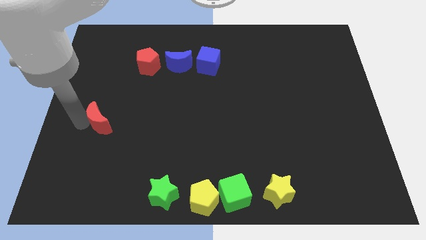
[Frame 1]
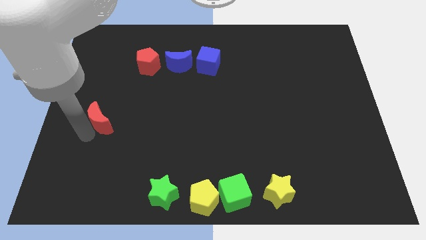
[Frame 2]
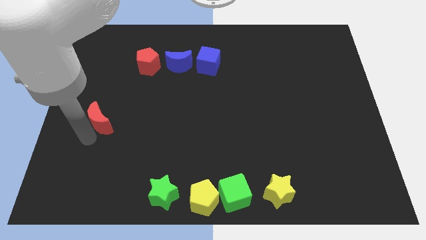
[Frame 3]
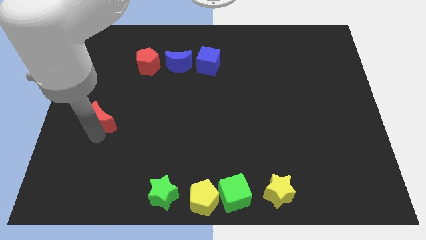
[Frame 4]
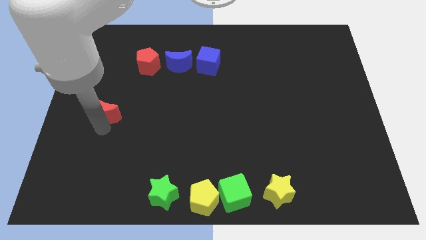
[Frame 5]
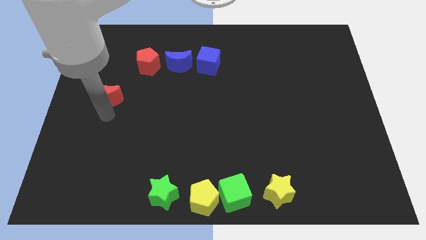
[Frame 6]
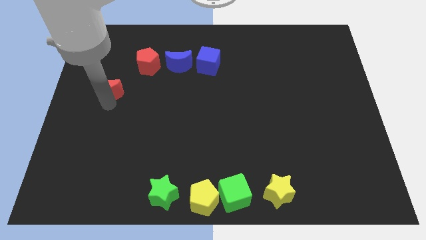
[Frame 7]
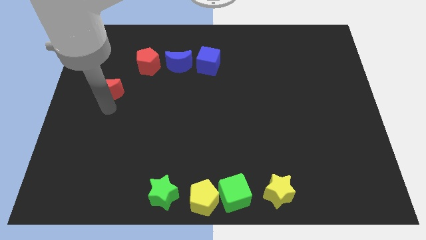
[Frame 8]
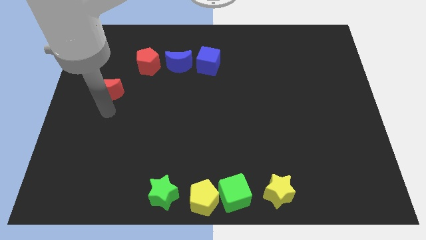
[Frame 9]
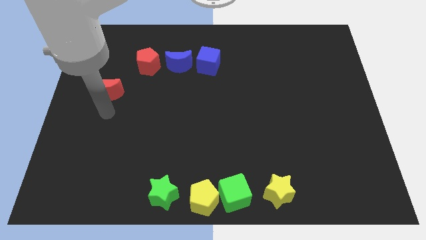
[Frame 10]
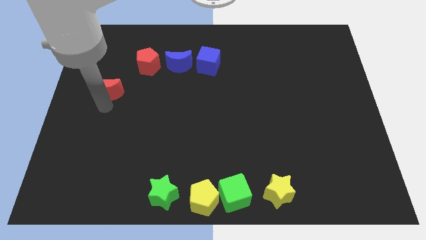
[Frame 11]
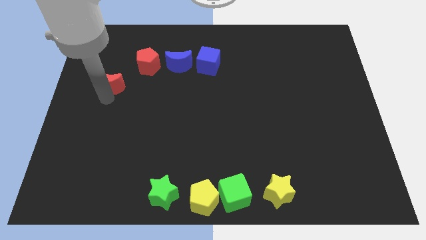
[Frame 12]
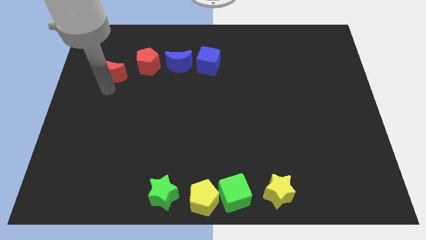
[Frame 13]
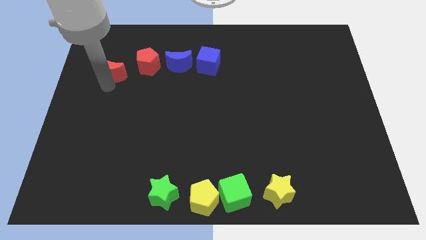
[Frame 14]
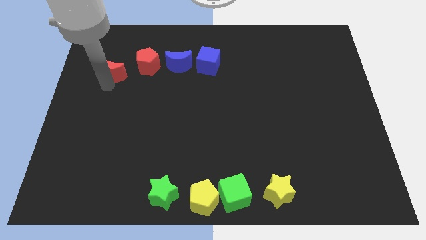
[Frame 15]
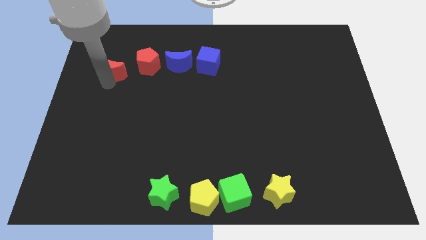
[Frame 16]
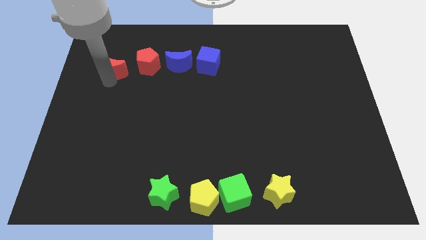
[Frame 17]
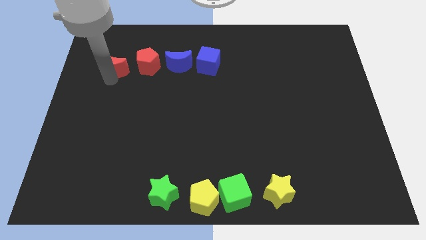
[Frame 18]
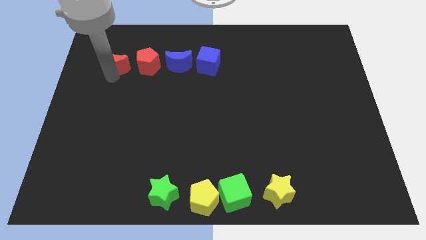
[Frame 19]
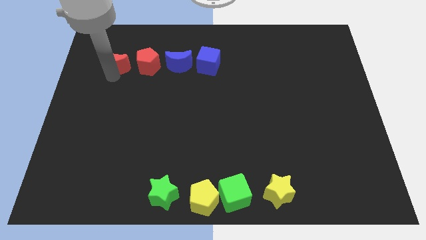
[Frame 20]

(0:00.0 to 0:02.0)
move the red crescent to the left side of red pentagon

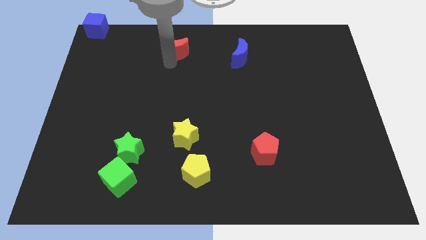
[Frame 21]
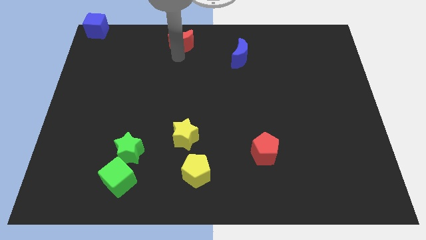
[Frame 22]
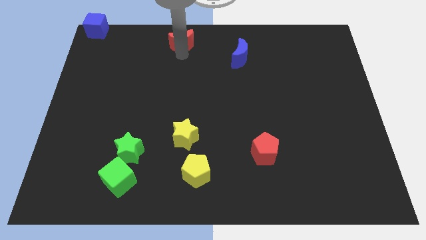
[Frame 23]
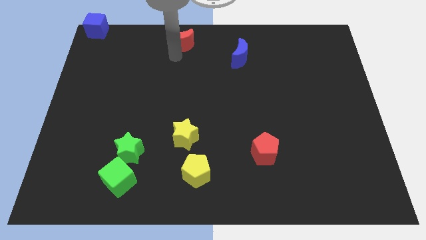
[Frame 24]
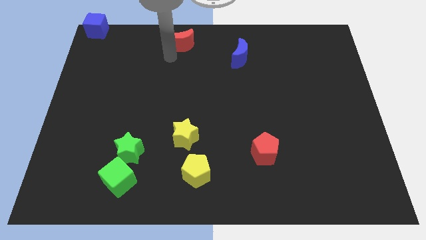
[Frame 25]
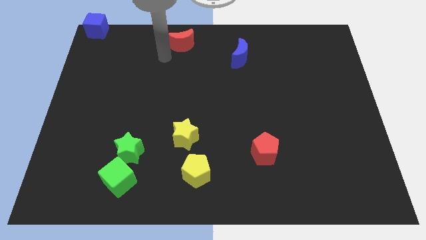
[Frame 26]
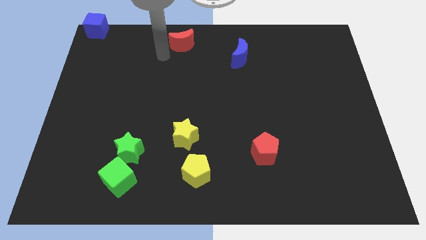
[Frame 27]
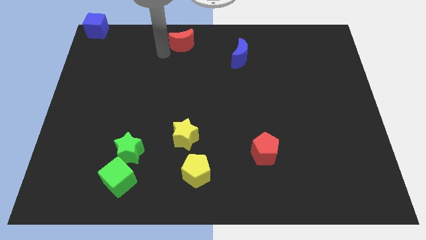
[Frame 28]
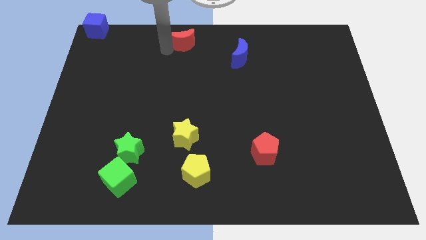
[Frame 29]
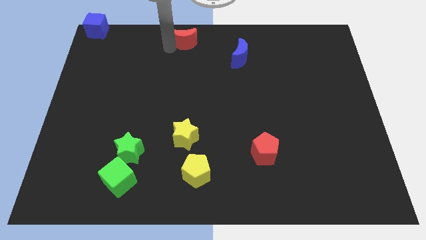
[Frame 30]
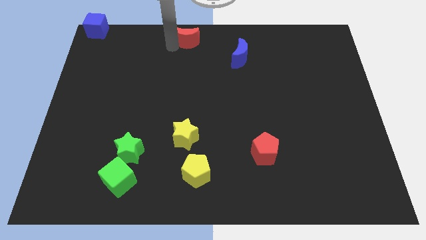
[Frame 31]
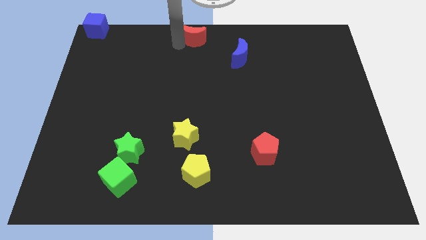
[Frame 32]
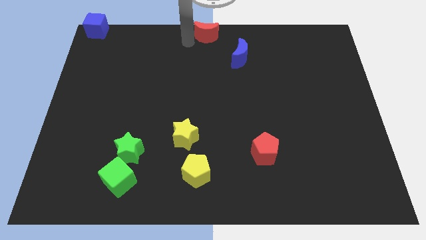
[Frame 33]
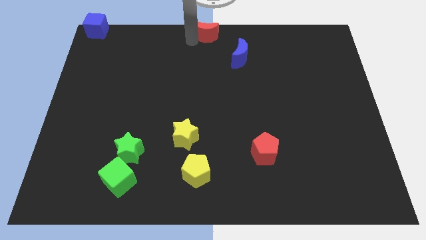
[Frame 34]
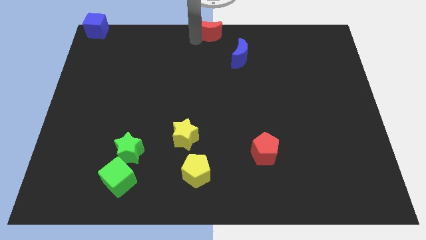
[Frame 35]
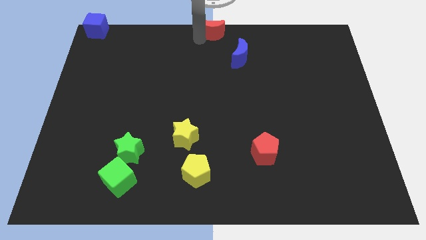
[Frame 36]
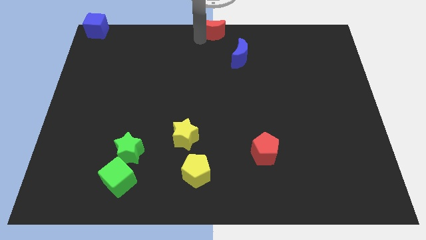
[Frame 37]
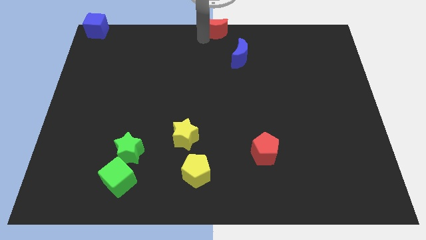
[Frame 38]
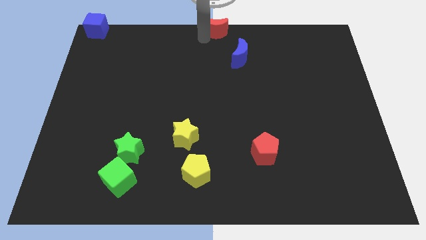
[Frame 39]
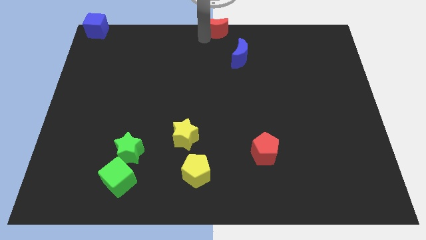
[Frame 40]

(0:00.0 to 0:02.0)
push the red crescent to the top center of the board

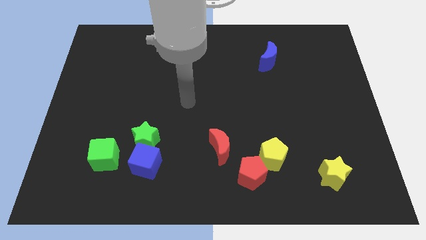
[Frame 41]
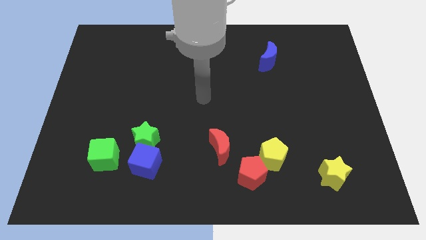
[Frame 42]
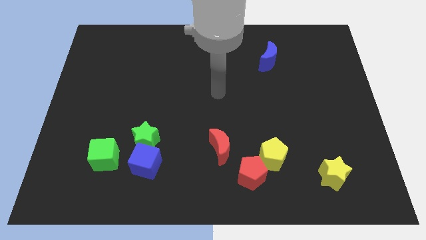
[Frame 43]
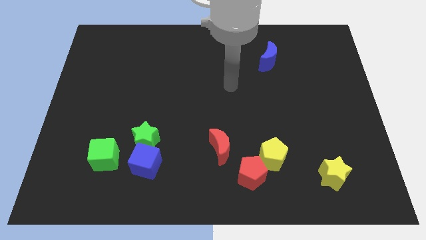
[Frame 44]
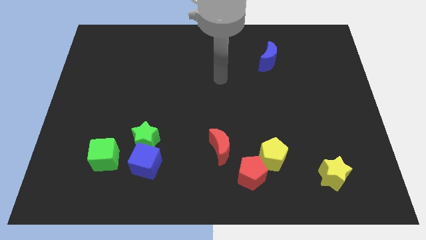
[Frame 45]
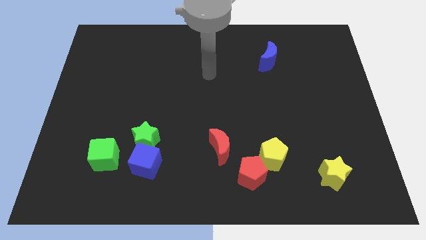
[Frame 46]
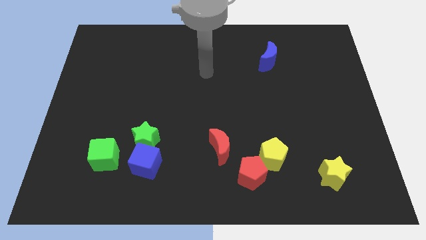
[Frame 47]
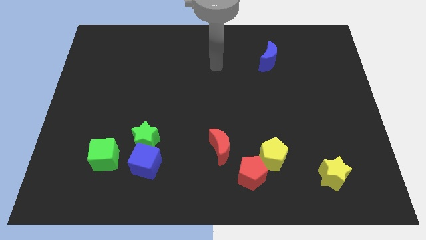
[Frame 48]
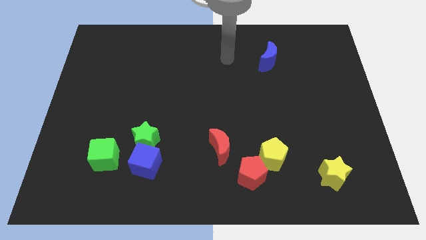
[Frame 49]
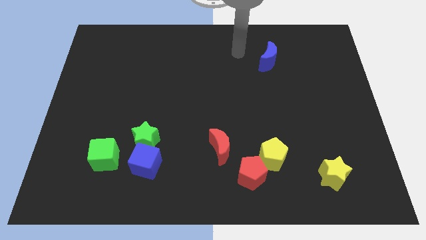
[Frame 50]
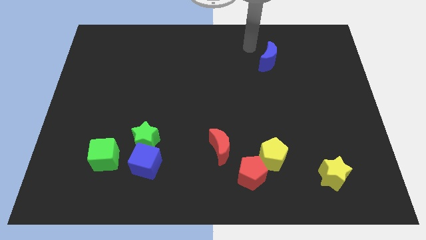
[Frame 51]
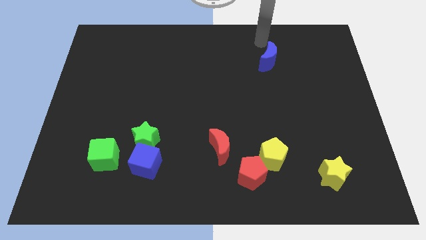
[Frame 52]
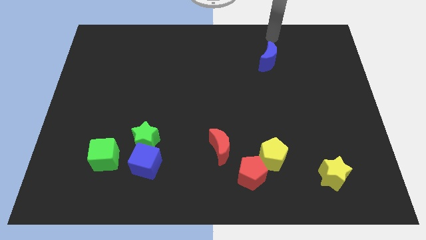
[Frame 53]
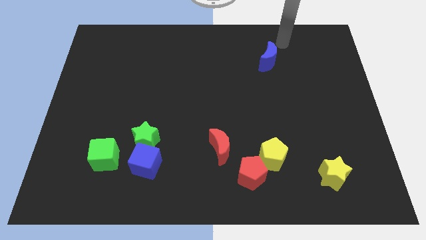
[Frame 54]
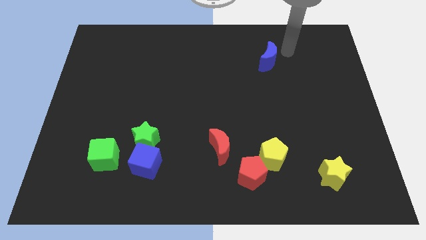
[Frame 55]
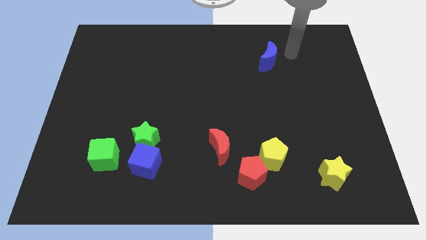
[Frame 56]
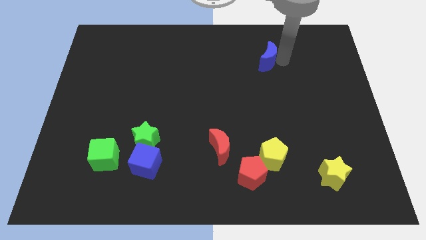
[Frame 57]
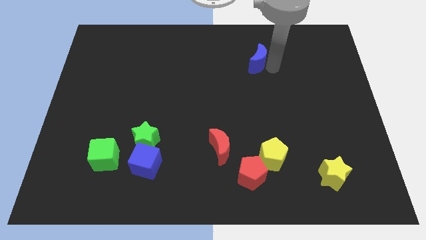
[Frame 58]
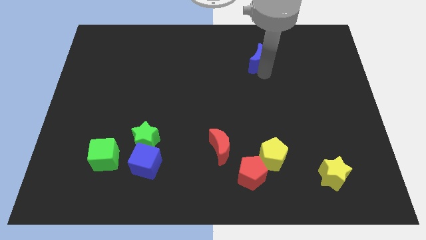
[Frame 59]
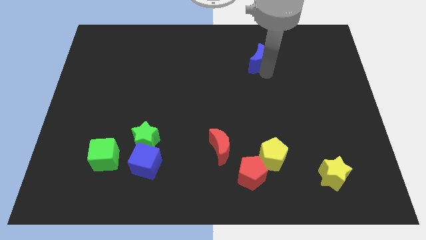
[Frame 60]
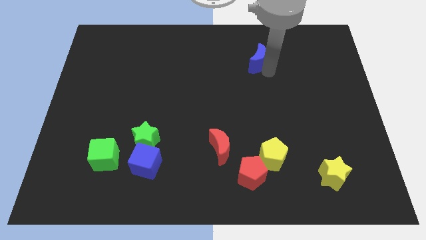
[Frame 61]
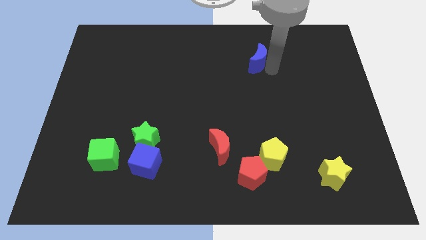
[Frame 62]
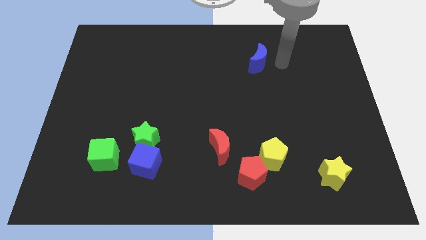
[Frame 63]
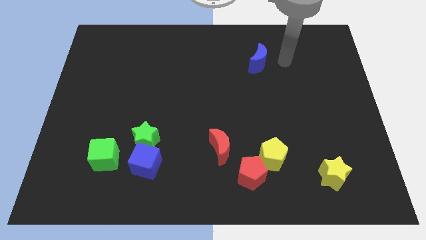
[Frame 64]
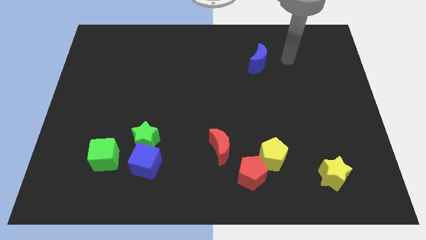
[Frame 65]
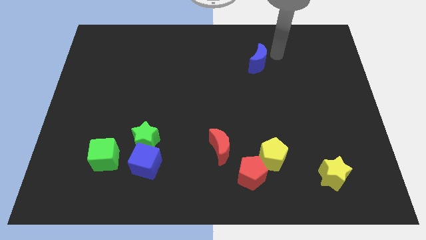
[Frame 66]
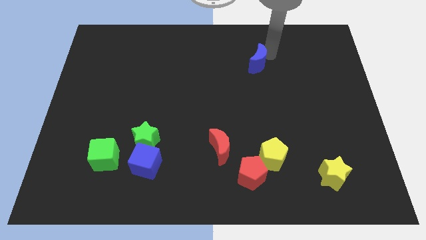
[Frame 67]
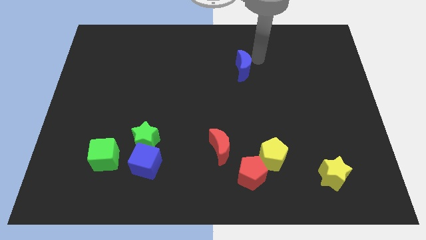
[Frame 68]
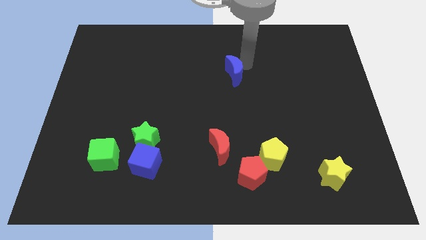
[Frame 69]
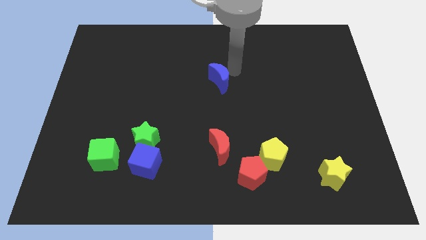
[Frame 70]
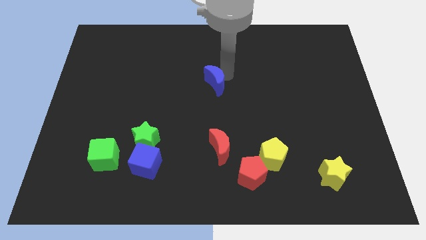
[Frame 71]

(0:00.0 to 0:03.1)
move the blue crescent vertically above the red crescent

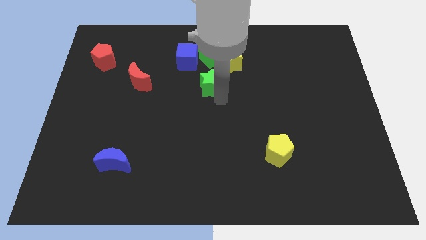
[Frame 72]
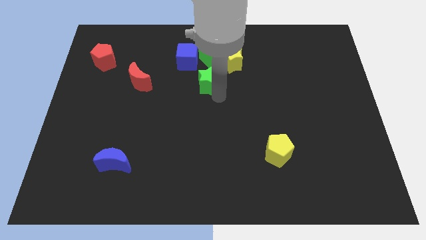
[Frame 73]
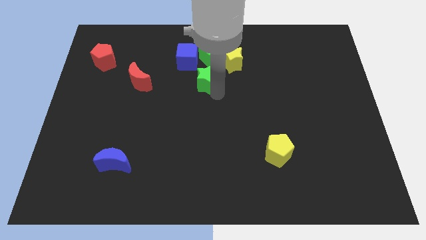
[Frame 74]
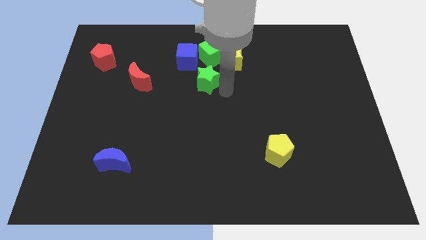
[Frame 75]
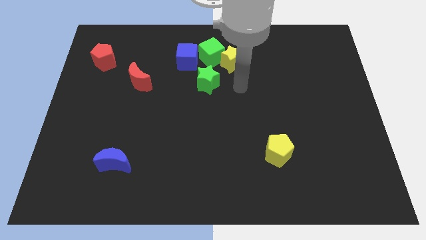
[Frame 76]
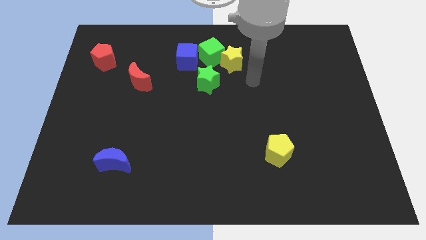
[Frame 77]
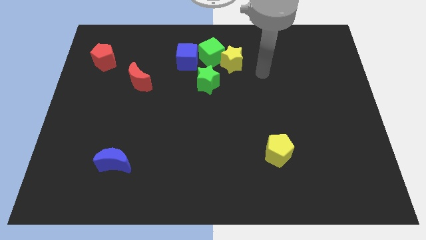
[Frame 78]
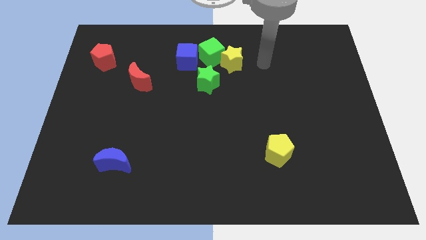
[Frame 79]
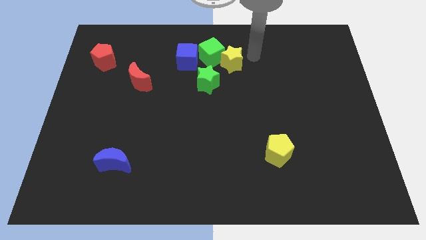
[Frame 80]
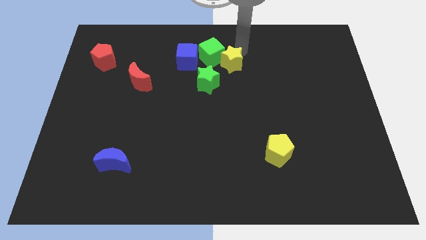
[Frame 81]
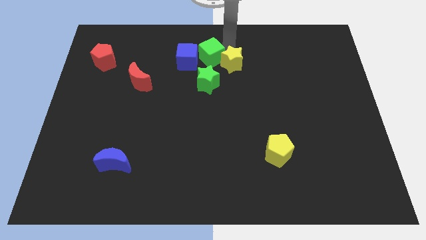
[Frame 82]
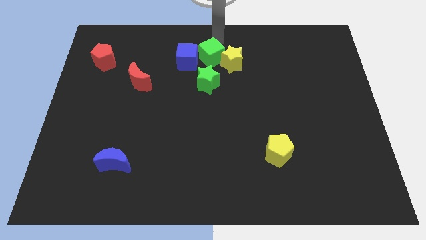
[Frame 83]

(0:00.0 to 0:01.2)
point your arm at the top of yellow star

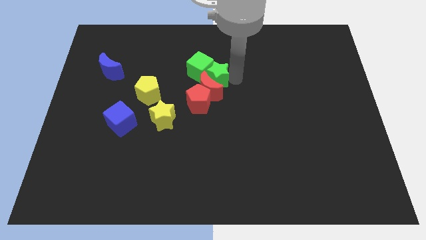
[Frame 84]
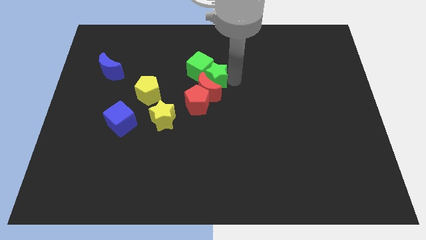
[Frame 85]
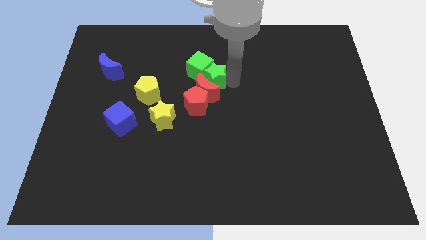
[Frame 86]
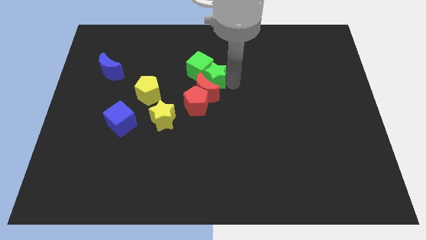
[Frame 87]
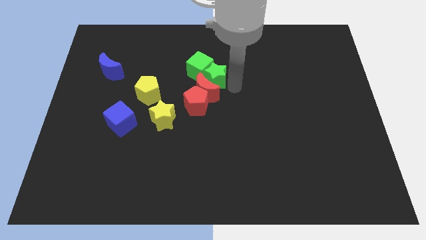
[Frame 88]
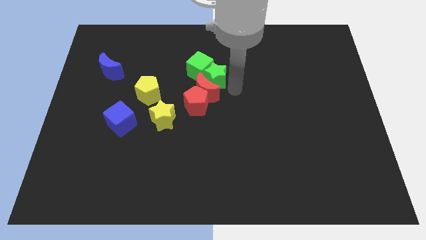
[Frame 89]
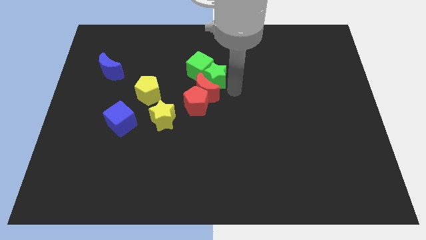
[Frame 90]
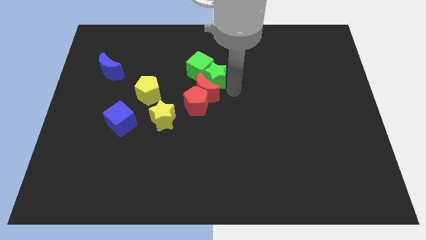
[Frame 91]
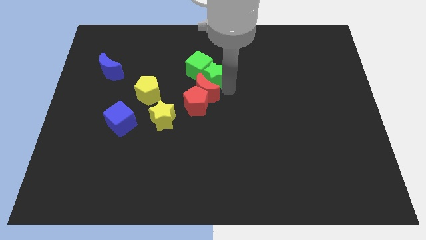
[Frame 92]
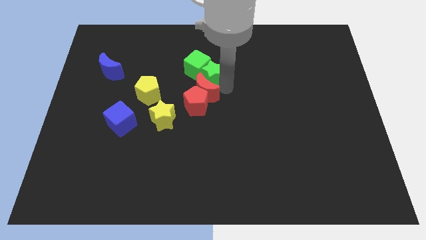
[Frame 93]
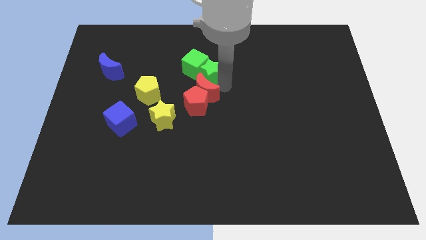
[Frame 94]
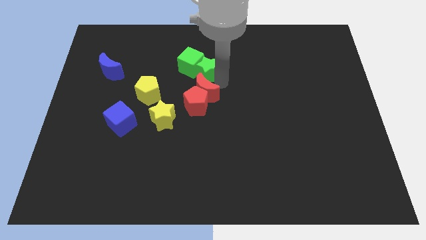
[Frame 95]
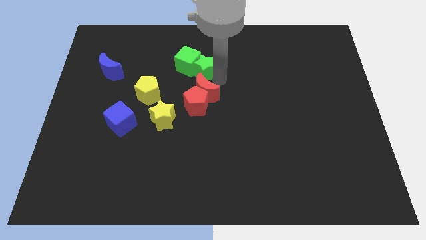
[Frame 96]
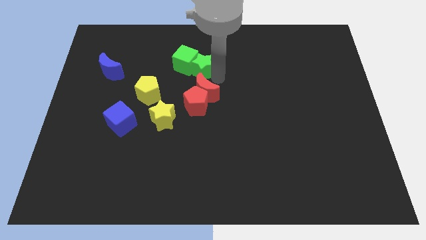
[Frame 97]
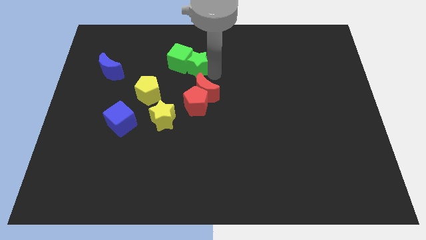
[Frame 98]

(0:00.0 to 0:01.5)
push the green blocks towards the top left side
